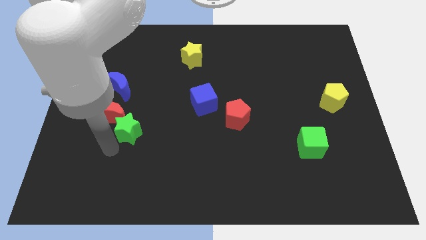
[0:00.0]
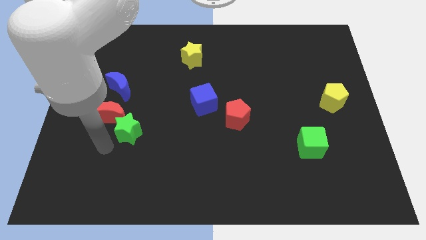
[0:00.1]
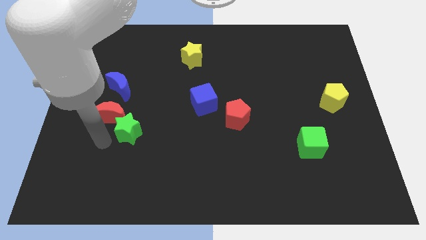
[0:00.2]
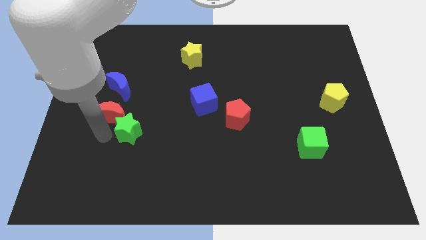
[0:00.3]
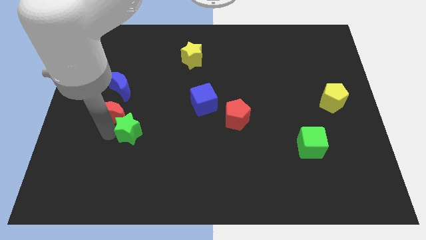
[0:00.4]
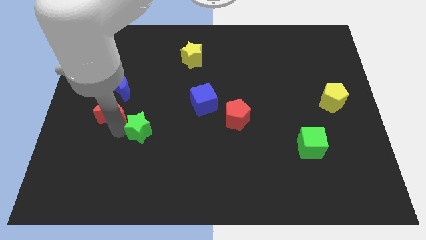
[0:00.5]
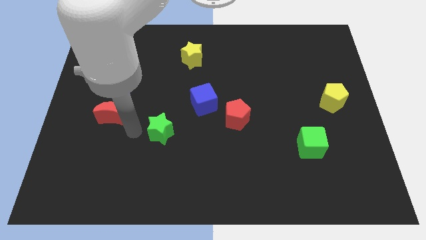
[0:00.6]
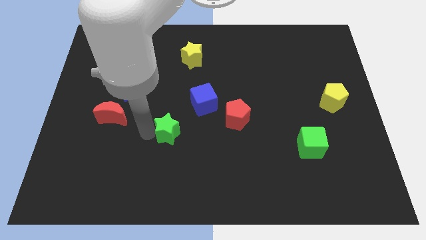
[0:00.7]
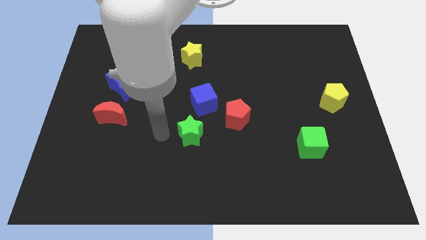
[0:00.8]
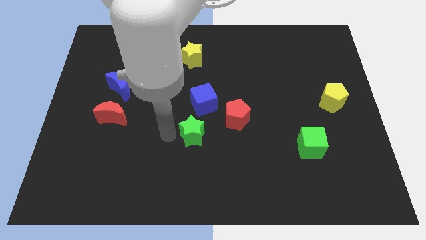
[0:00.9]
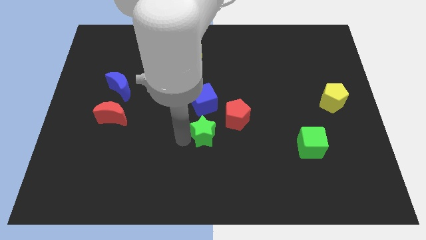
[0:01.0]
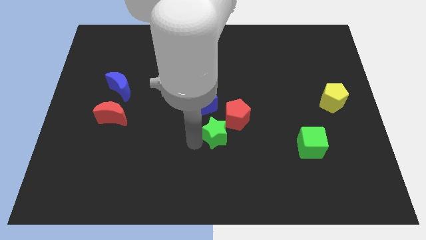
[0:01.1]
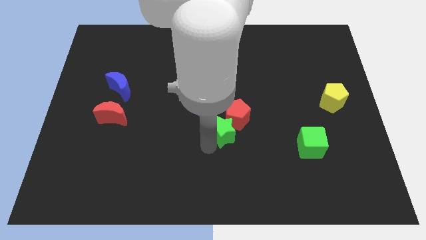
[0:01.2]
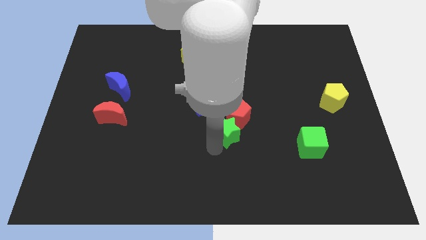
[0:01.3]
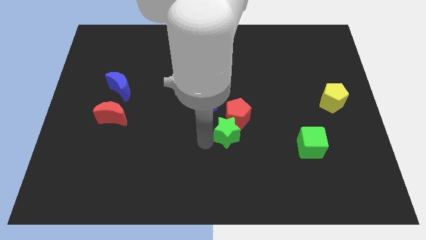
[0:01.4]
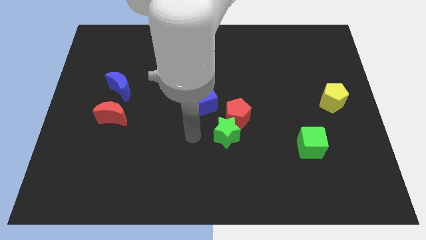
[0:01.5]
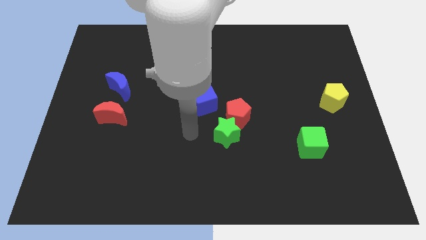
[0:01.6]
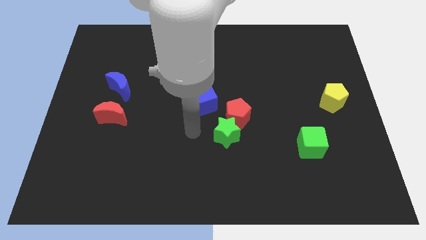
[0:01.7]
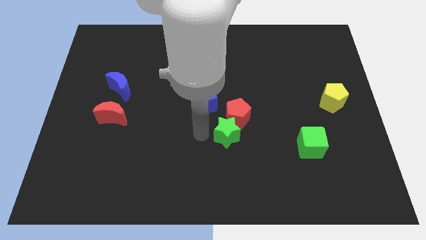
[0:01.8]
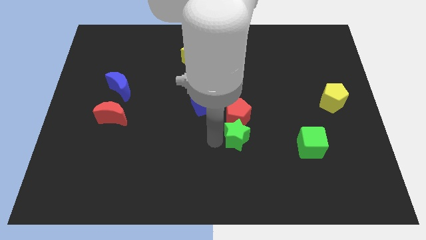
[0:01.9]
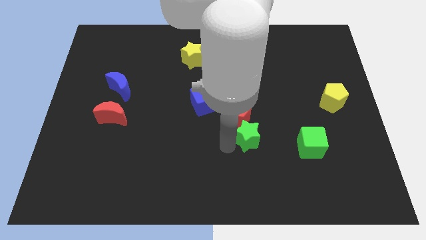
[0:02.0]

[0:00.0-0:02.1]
move the green star below red pentagon

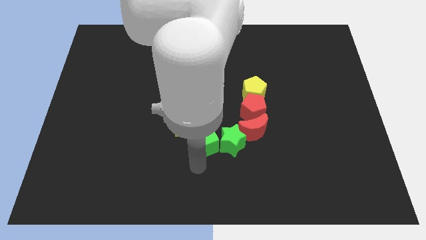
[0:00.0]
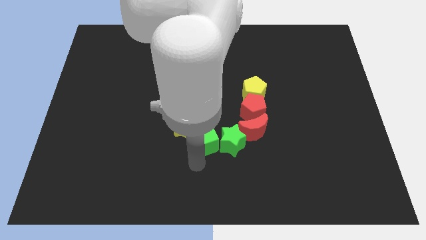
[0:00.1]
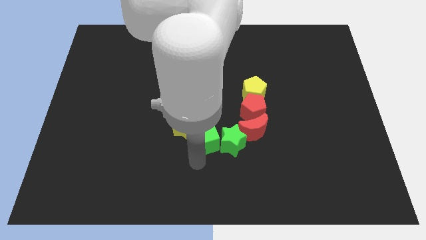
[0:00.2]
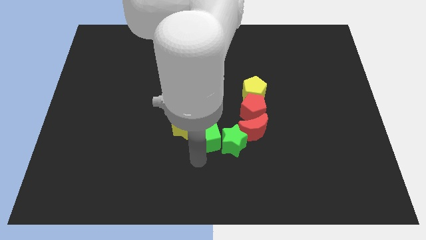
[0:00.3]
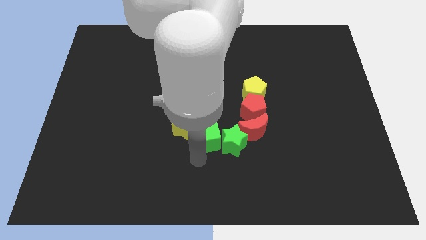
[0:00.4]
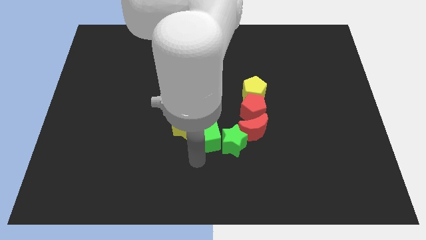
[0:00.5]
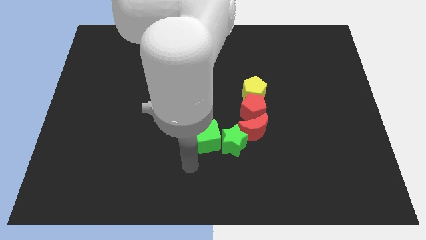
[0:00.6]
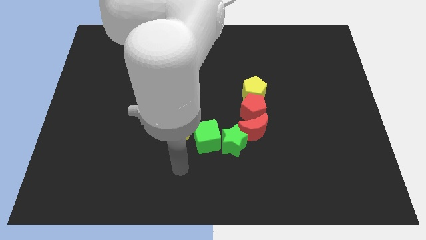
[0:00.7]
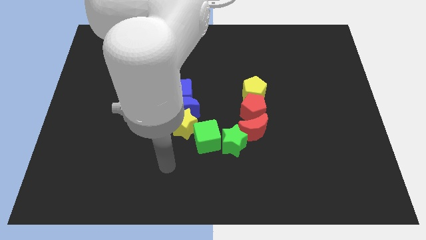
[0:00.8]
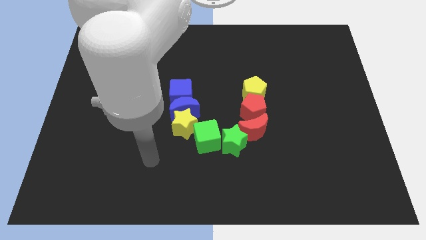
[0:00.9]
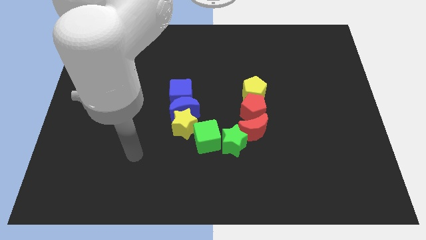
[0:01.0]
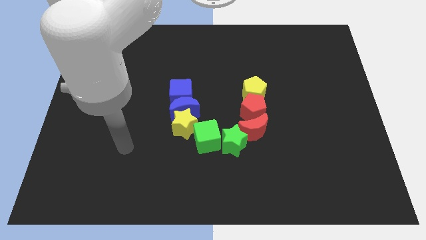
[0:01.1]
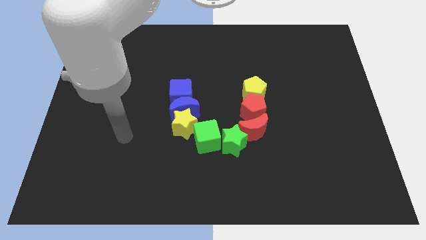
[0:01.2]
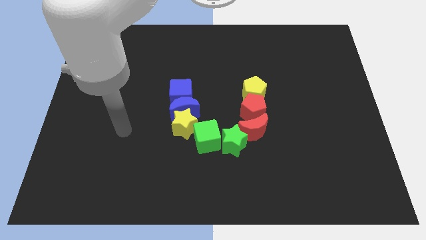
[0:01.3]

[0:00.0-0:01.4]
move your arm away from green cube

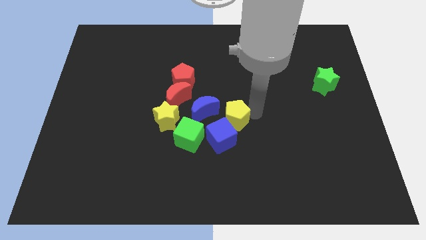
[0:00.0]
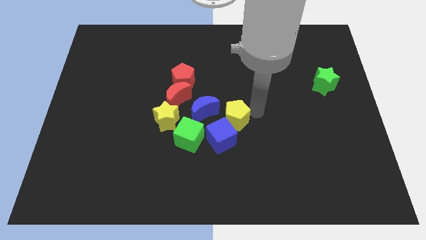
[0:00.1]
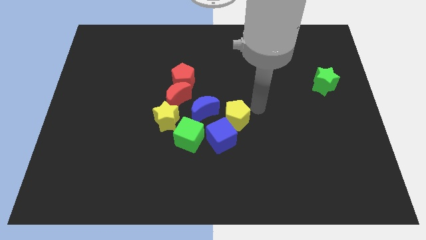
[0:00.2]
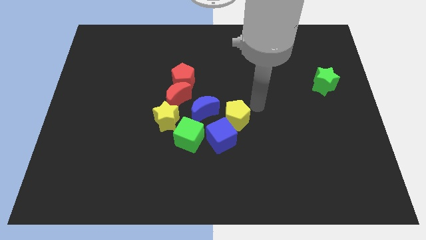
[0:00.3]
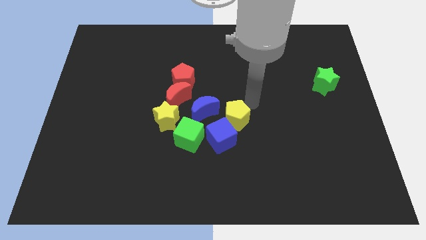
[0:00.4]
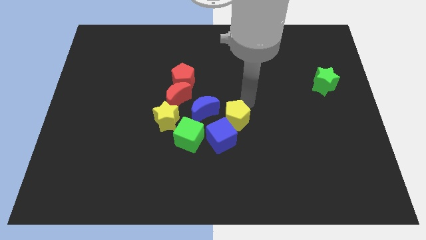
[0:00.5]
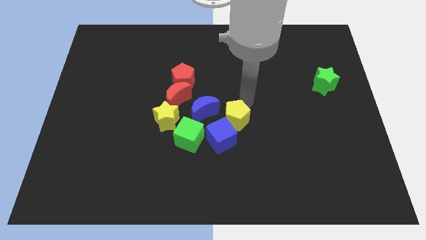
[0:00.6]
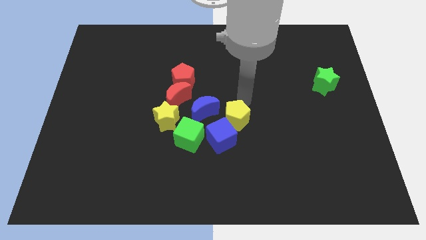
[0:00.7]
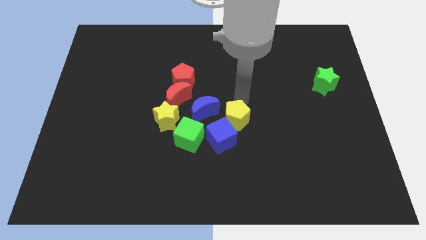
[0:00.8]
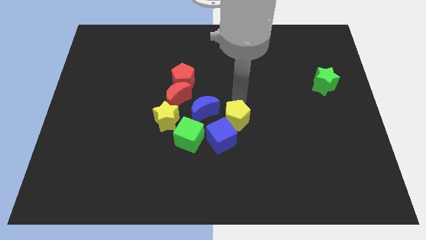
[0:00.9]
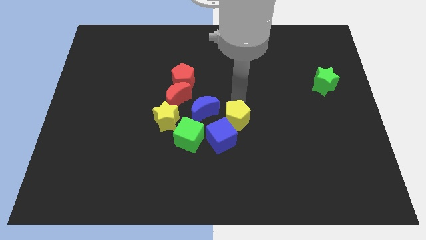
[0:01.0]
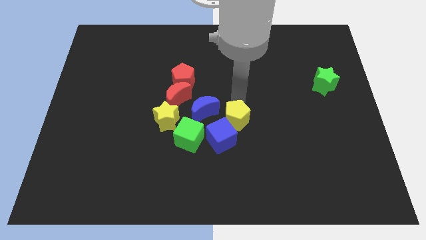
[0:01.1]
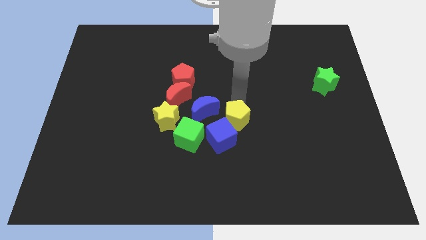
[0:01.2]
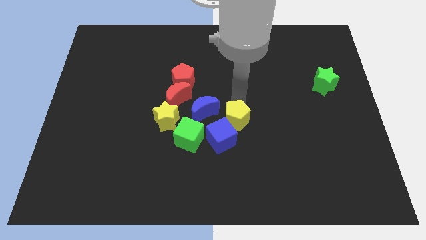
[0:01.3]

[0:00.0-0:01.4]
place your arm to the top of the yellow pentagon

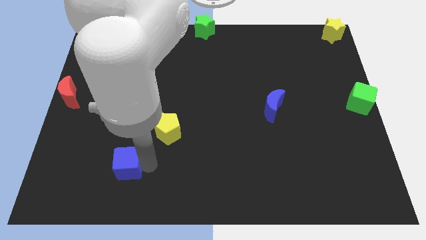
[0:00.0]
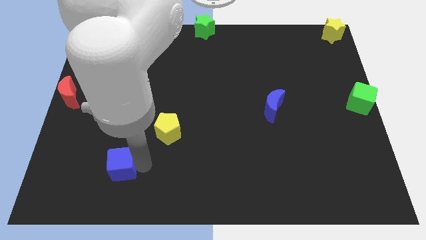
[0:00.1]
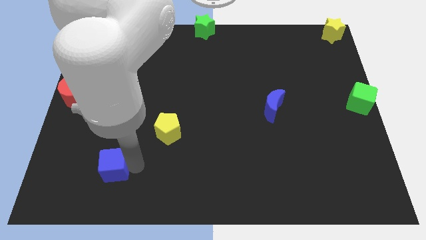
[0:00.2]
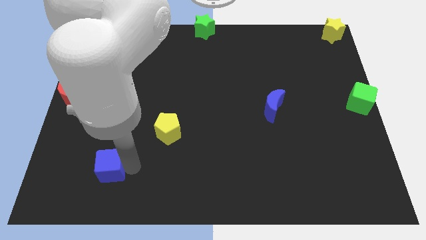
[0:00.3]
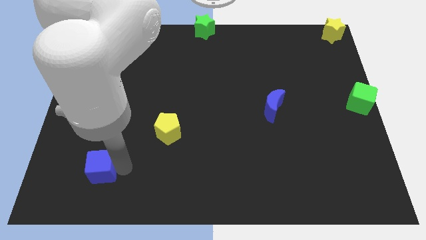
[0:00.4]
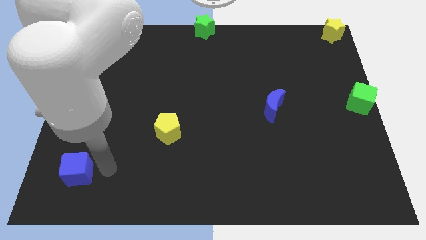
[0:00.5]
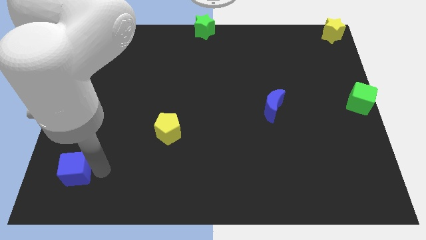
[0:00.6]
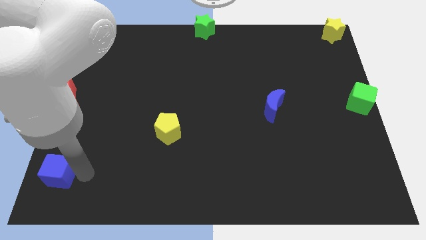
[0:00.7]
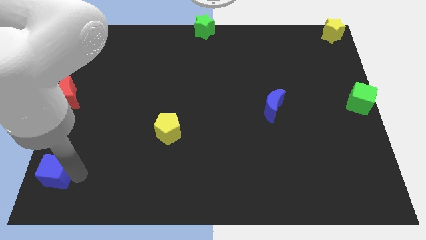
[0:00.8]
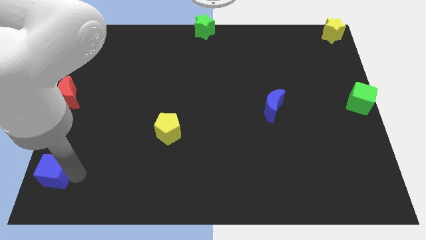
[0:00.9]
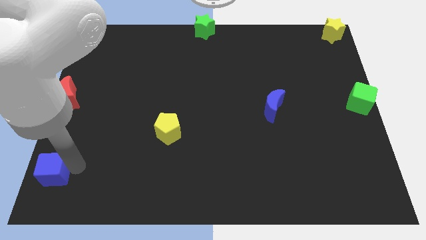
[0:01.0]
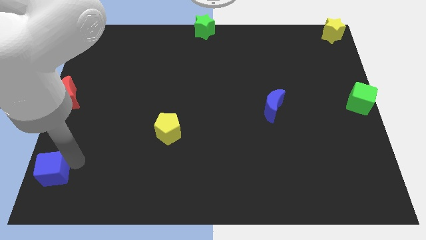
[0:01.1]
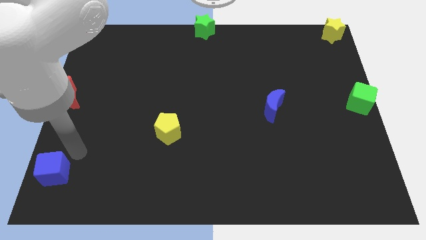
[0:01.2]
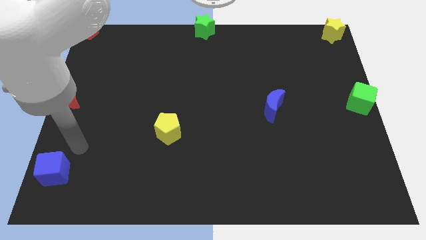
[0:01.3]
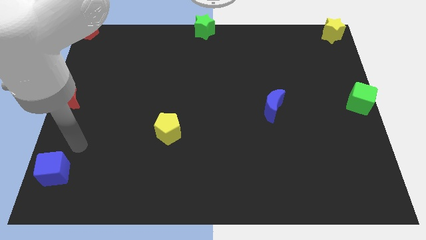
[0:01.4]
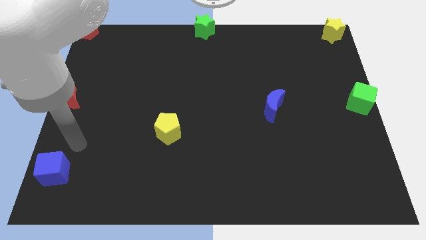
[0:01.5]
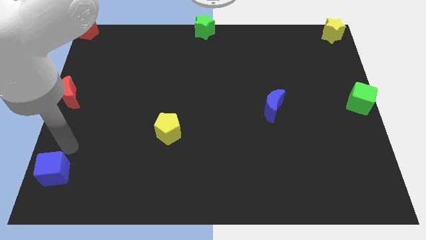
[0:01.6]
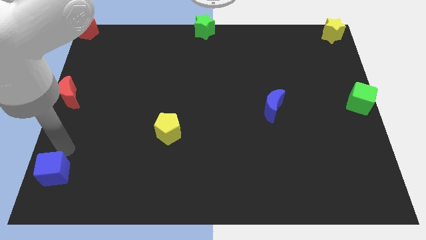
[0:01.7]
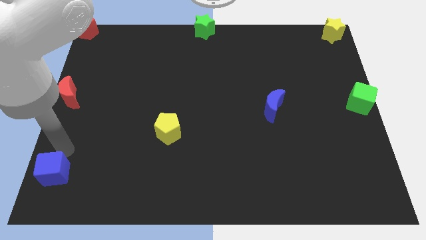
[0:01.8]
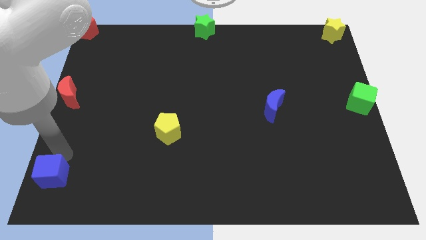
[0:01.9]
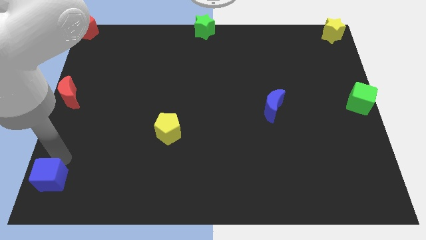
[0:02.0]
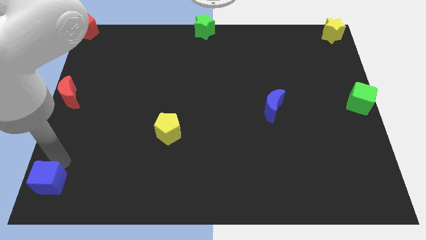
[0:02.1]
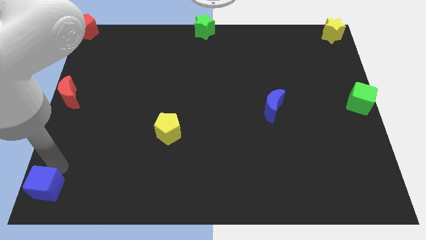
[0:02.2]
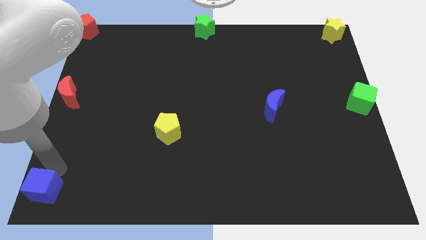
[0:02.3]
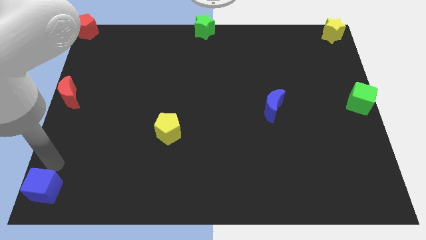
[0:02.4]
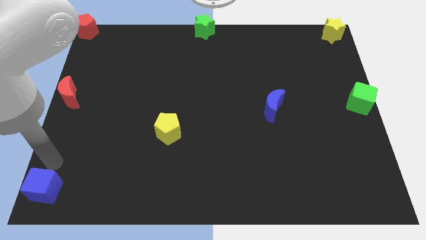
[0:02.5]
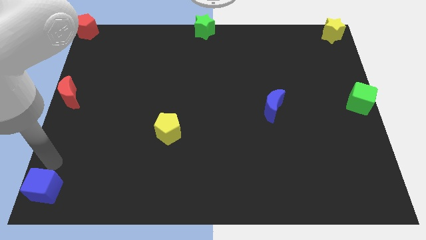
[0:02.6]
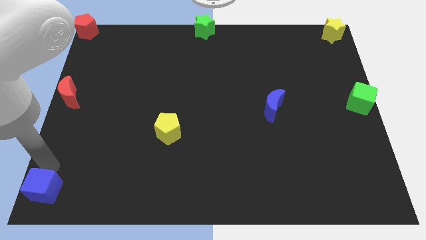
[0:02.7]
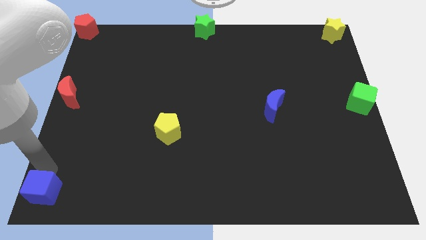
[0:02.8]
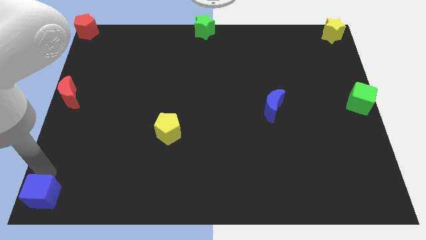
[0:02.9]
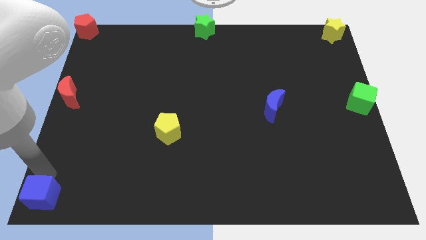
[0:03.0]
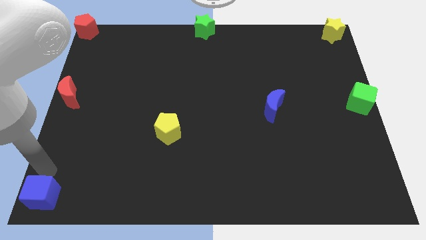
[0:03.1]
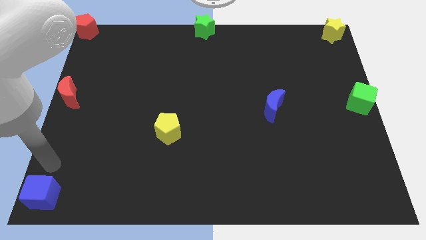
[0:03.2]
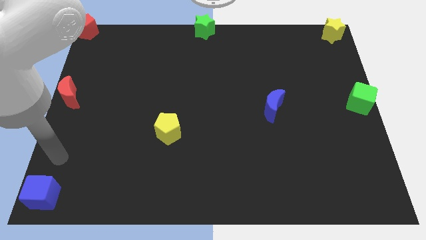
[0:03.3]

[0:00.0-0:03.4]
place blue cube towards left bottom corner

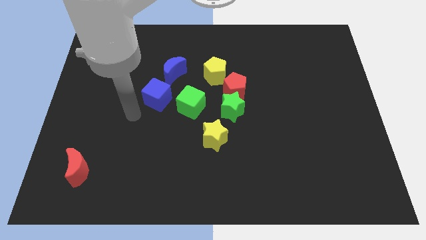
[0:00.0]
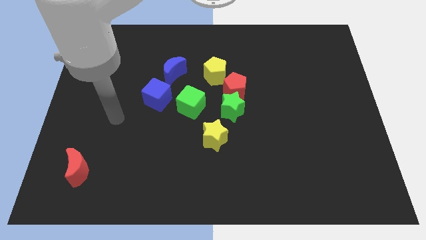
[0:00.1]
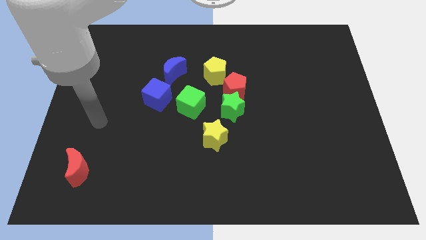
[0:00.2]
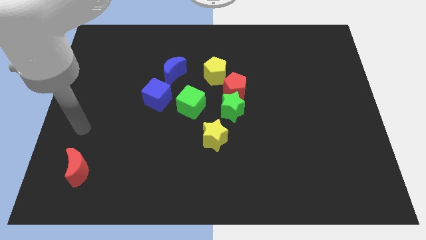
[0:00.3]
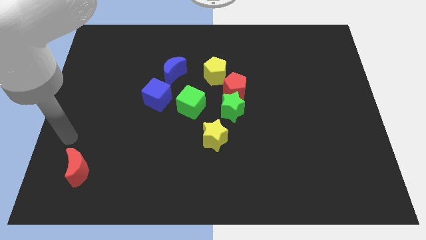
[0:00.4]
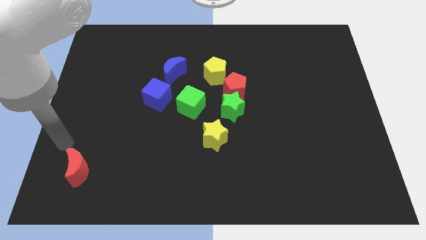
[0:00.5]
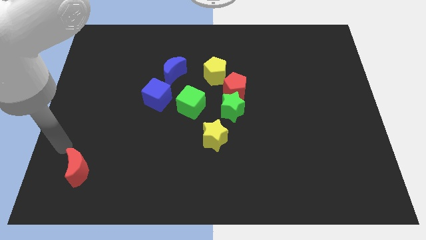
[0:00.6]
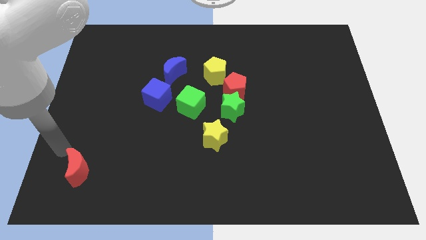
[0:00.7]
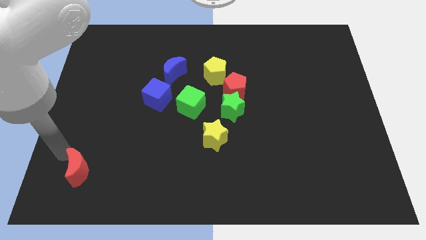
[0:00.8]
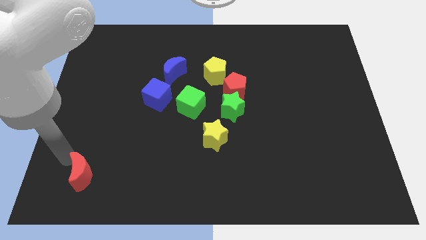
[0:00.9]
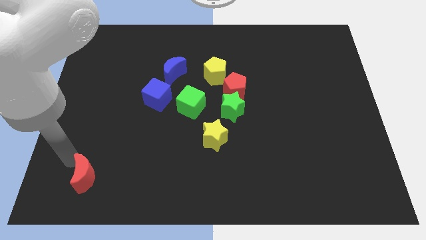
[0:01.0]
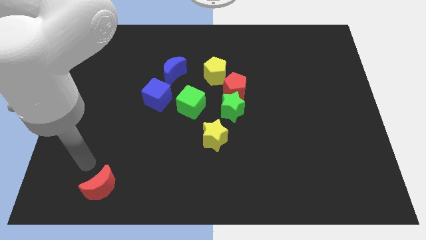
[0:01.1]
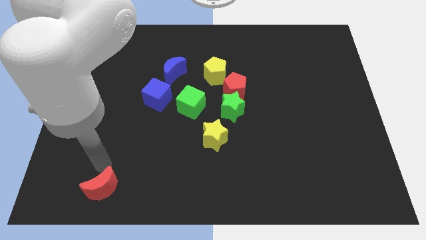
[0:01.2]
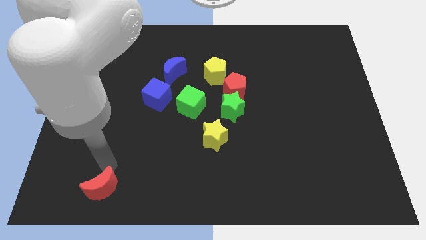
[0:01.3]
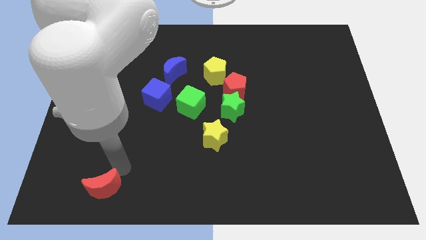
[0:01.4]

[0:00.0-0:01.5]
push the red moon towards the bottom side
